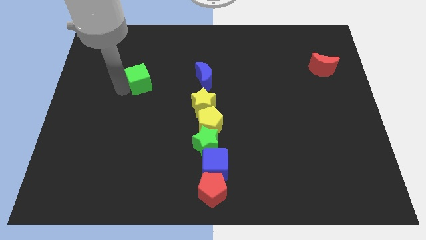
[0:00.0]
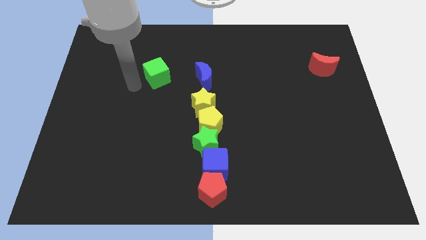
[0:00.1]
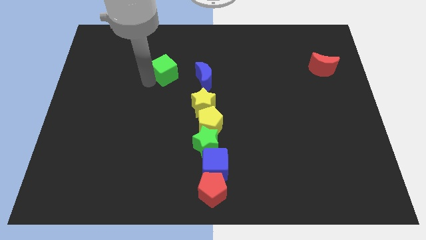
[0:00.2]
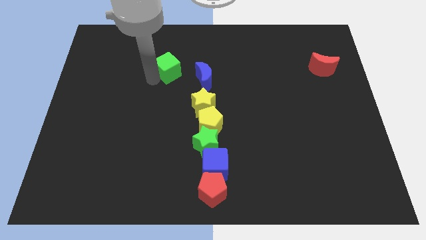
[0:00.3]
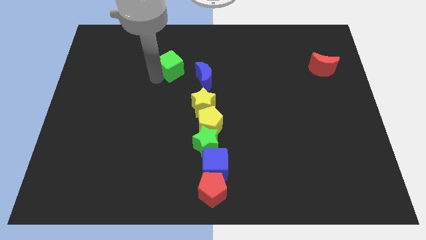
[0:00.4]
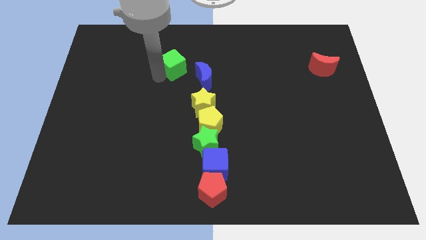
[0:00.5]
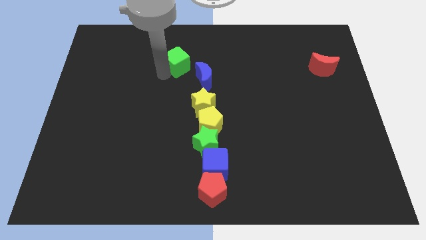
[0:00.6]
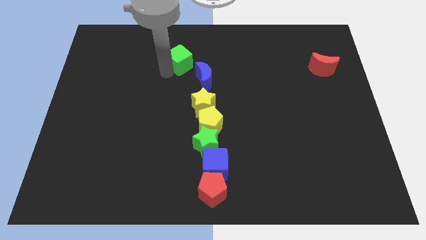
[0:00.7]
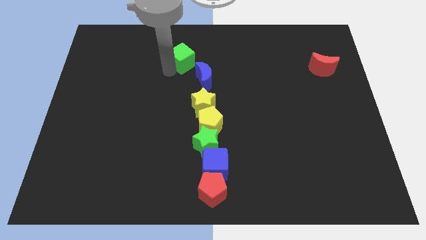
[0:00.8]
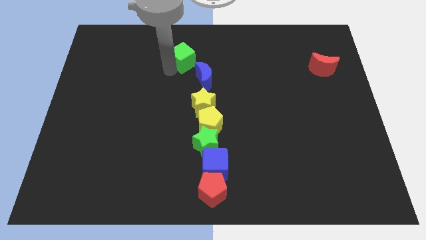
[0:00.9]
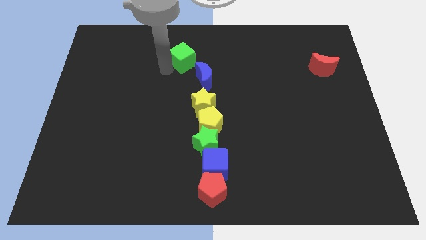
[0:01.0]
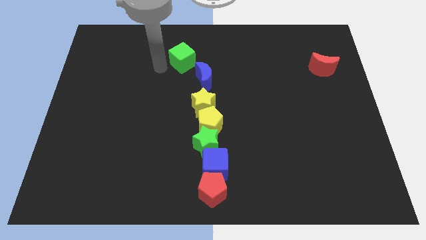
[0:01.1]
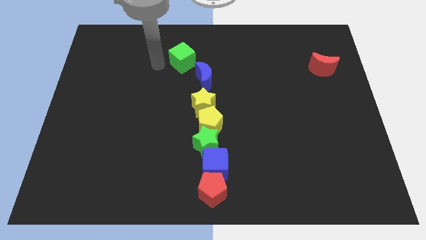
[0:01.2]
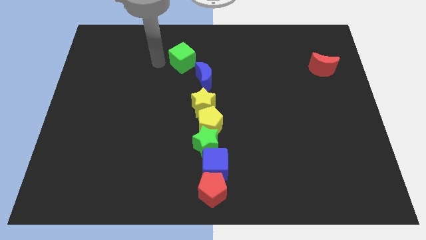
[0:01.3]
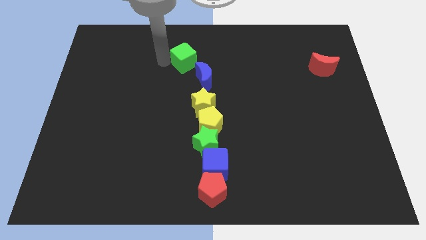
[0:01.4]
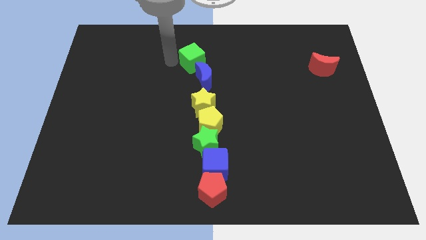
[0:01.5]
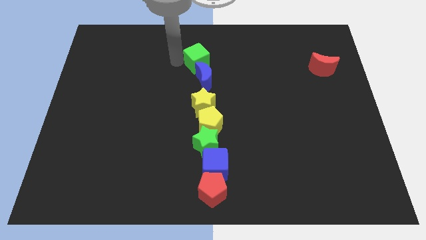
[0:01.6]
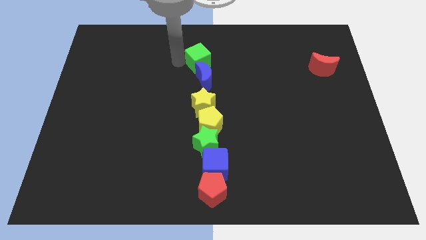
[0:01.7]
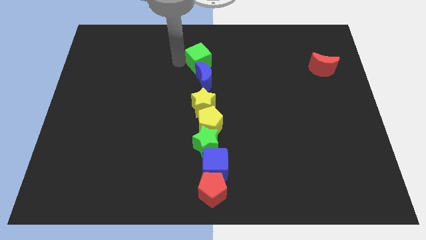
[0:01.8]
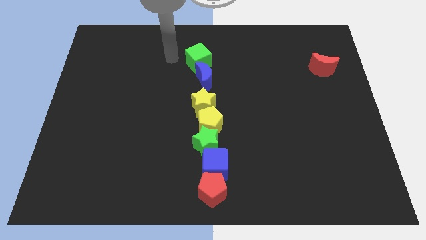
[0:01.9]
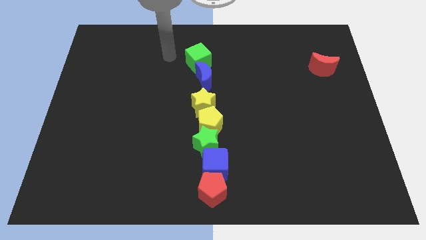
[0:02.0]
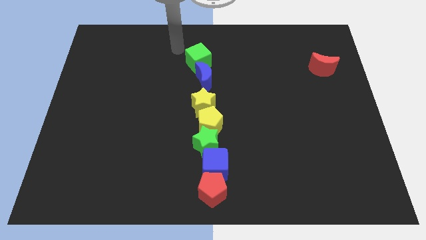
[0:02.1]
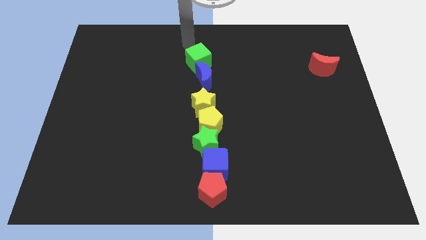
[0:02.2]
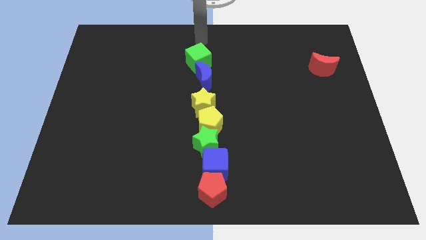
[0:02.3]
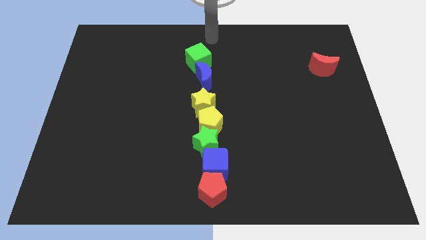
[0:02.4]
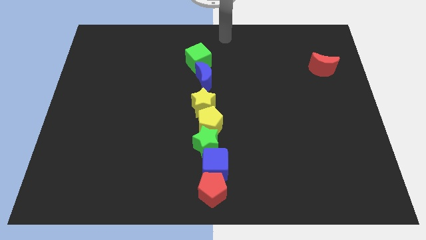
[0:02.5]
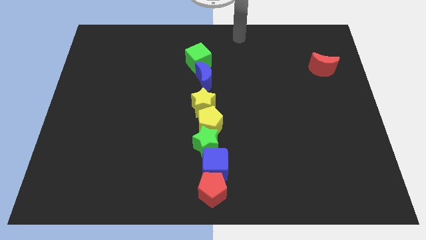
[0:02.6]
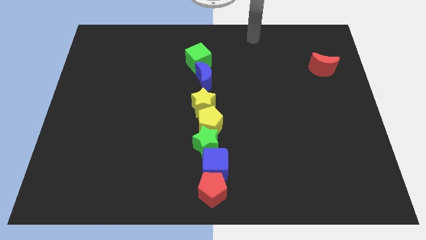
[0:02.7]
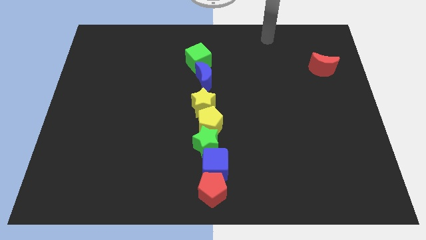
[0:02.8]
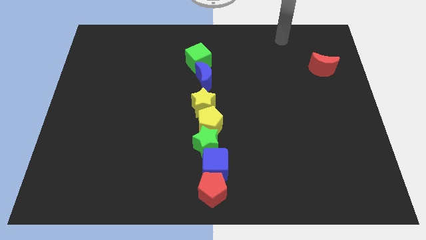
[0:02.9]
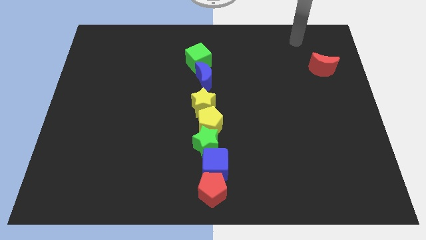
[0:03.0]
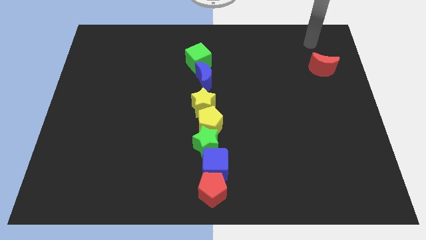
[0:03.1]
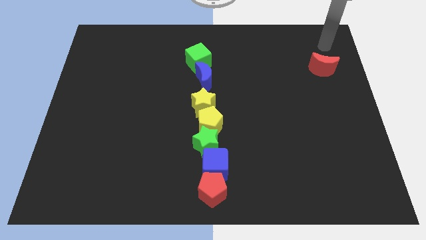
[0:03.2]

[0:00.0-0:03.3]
place the green cube at the top side of the blue moon

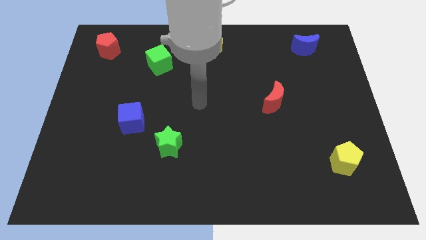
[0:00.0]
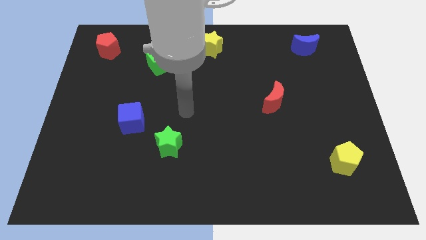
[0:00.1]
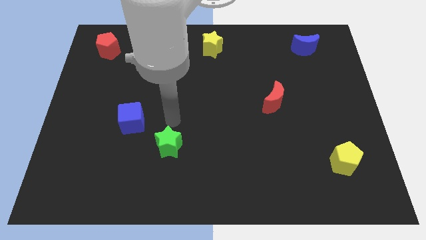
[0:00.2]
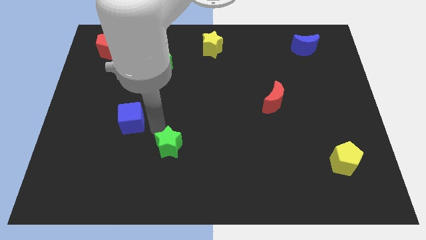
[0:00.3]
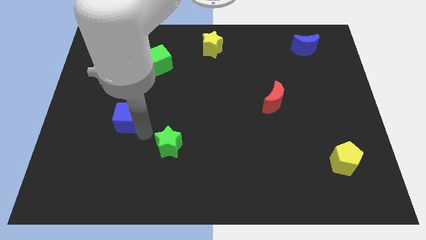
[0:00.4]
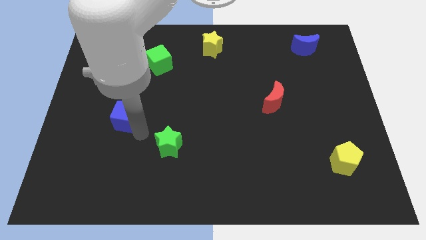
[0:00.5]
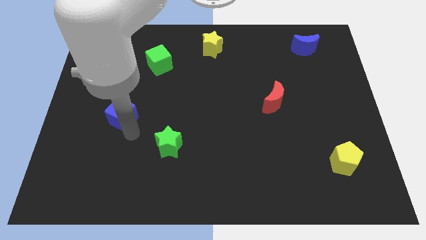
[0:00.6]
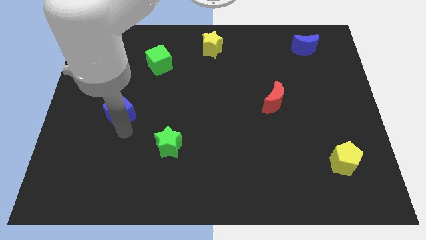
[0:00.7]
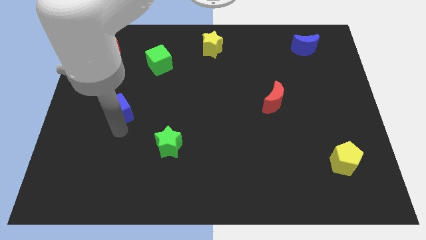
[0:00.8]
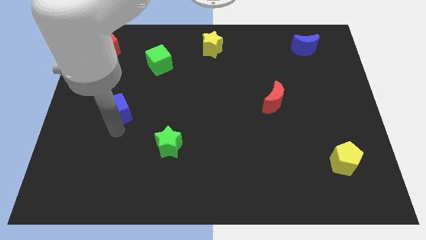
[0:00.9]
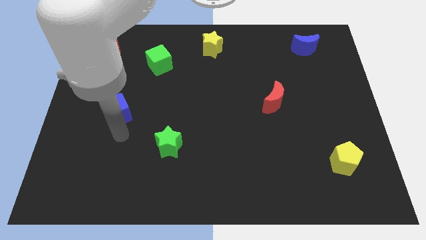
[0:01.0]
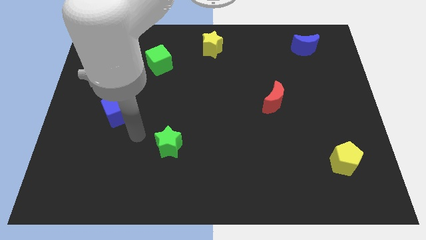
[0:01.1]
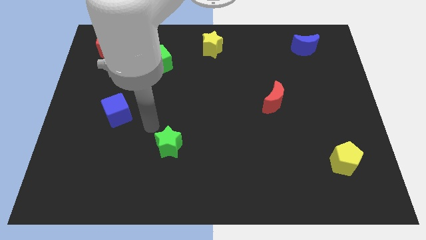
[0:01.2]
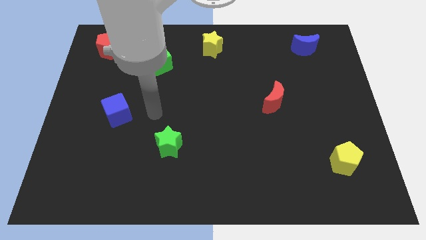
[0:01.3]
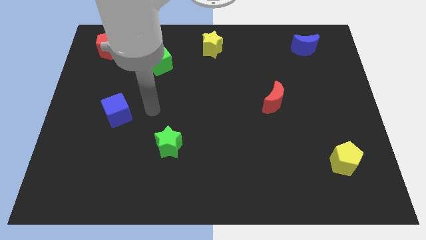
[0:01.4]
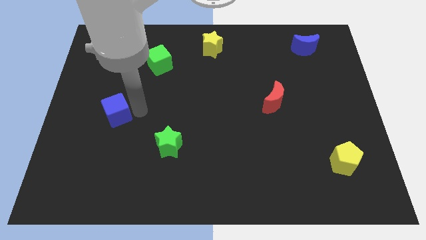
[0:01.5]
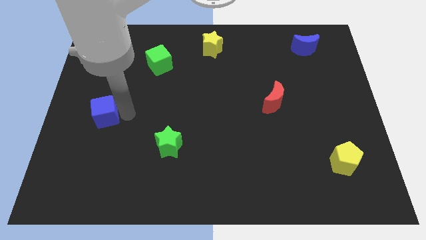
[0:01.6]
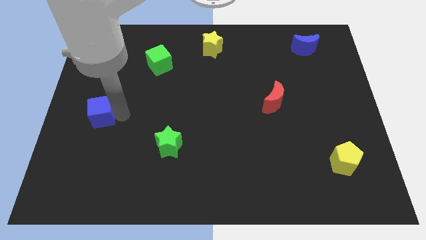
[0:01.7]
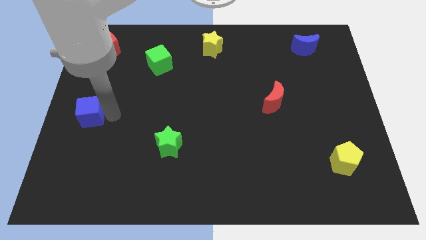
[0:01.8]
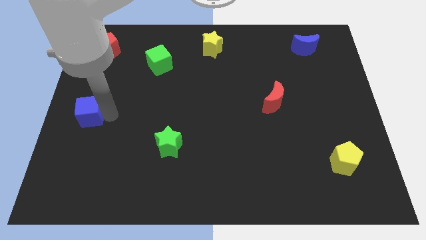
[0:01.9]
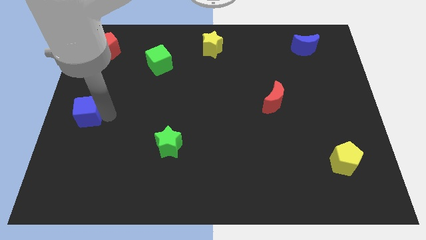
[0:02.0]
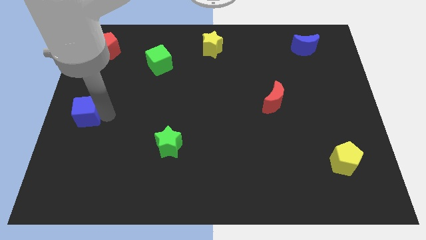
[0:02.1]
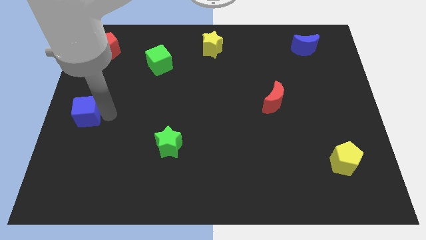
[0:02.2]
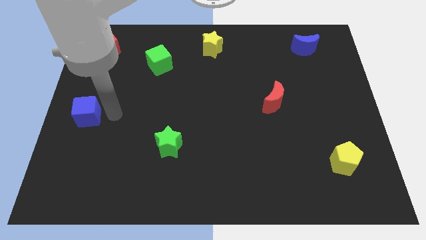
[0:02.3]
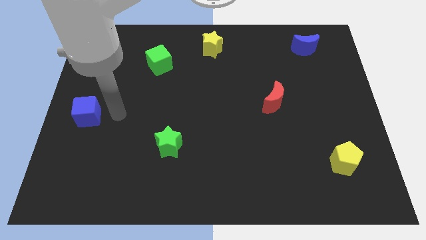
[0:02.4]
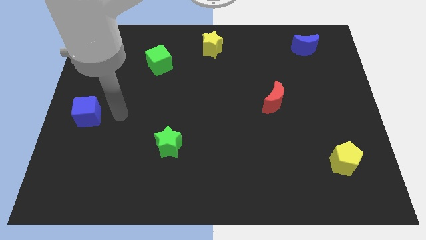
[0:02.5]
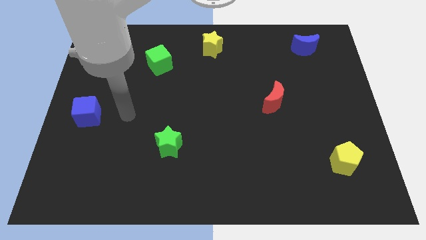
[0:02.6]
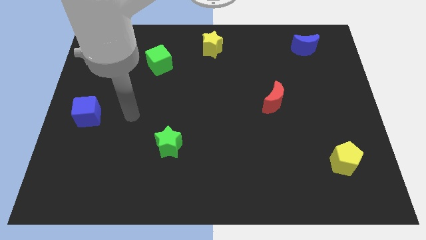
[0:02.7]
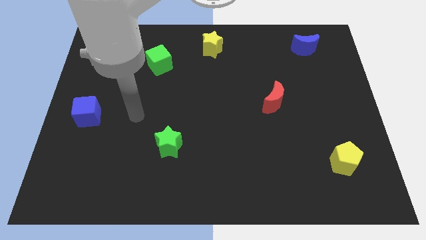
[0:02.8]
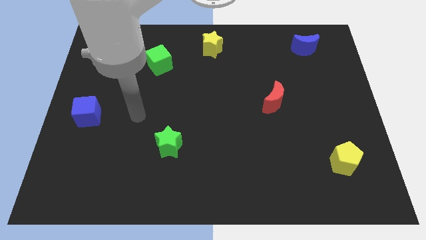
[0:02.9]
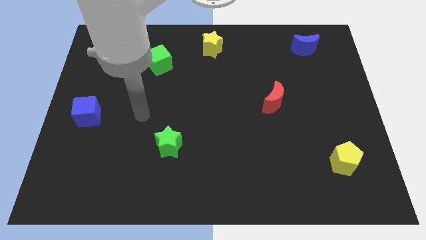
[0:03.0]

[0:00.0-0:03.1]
move blue cube towards center left

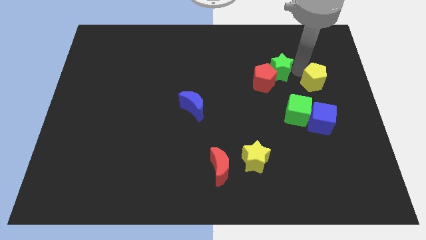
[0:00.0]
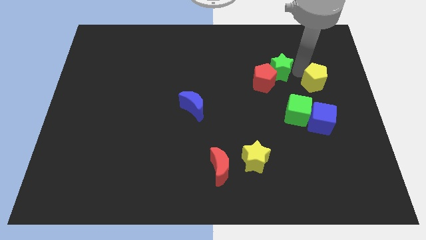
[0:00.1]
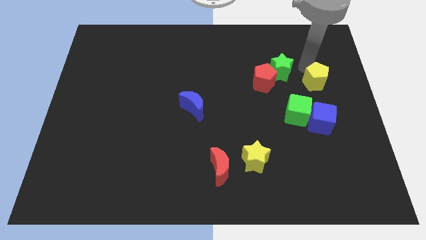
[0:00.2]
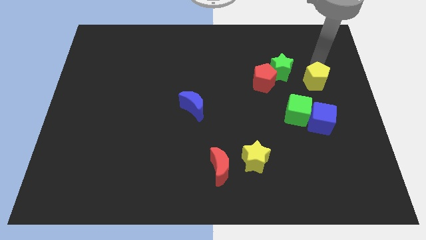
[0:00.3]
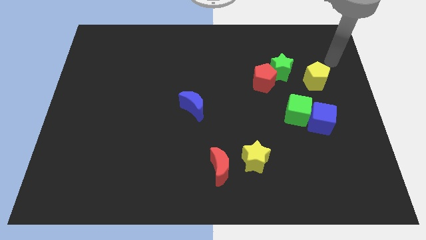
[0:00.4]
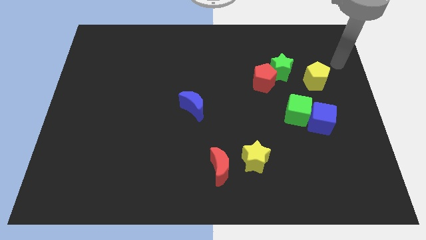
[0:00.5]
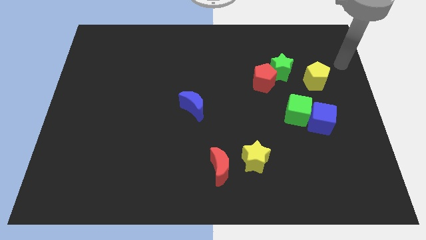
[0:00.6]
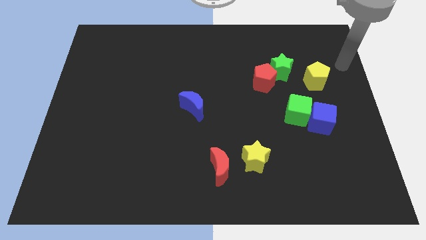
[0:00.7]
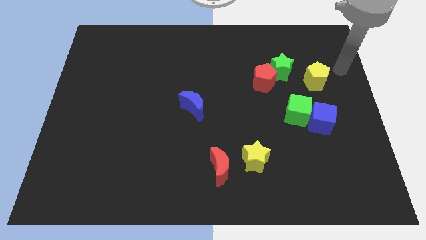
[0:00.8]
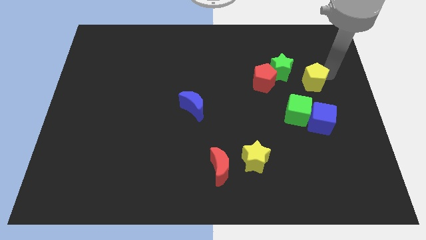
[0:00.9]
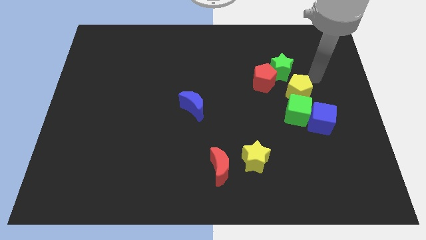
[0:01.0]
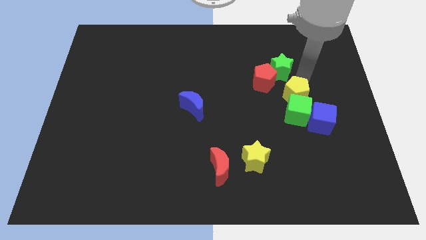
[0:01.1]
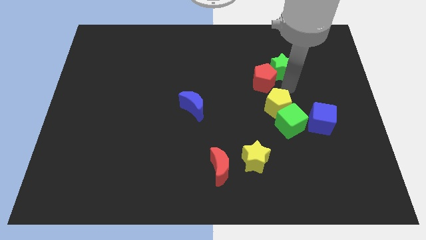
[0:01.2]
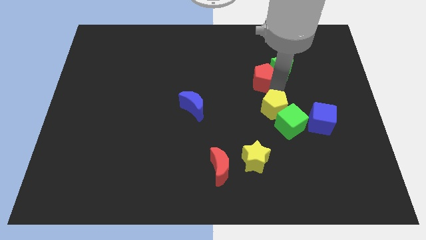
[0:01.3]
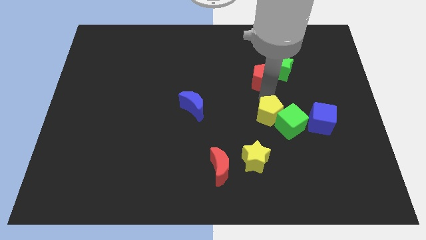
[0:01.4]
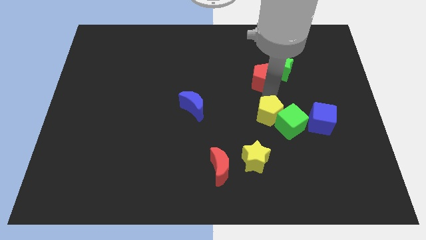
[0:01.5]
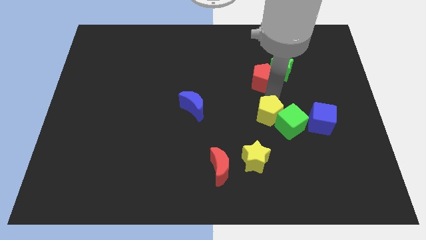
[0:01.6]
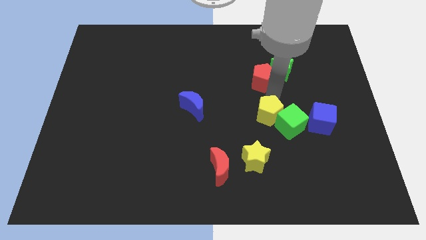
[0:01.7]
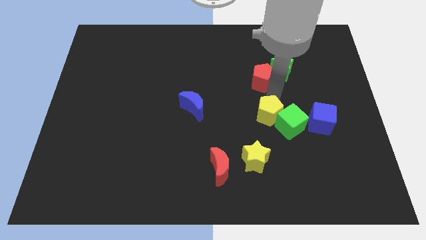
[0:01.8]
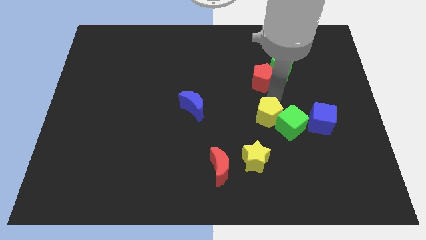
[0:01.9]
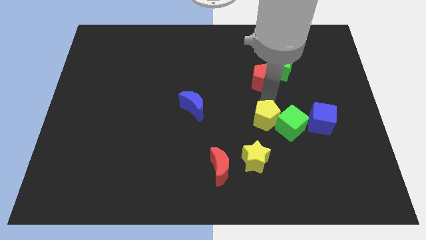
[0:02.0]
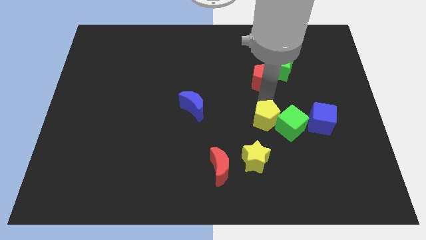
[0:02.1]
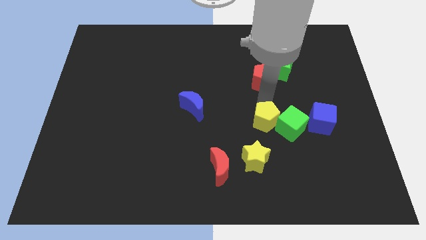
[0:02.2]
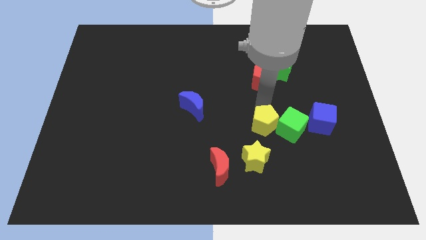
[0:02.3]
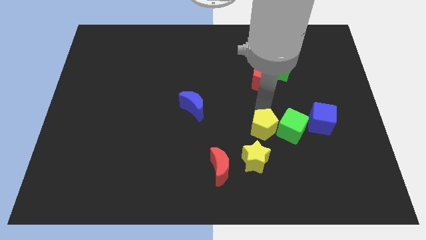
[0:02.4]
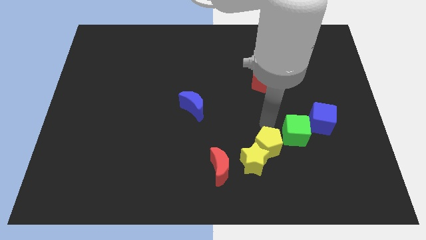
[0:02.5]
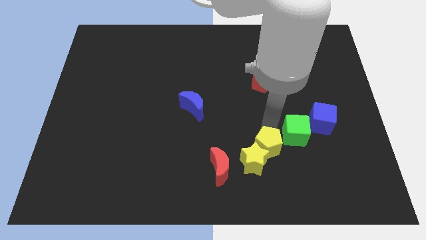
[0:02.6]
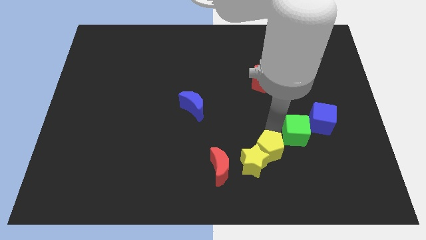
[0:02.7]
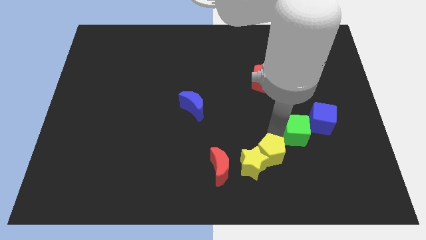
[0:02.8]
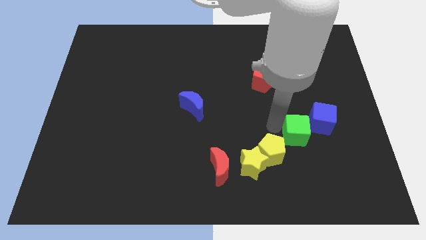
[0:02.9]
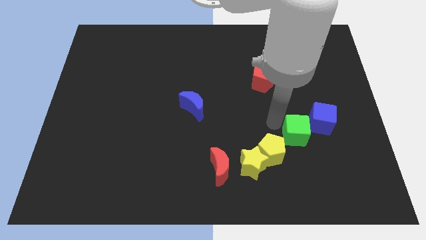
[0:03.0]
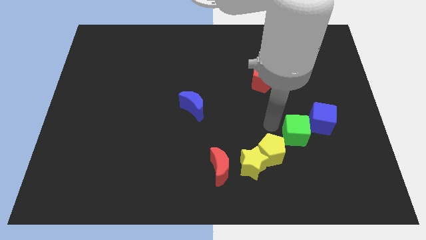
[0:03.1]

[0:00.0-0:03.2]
push the yellow pentagon into the yellow star
